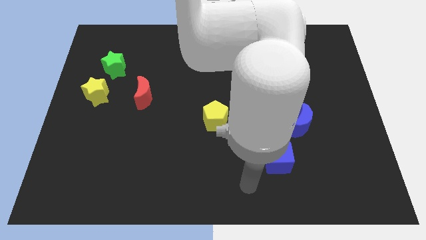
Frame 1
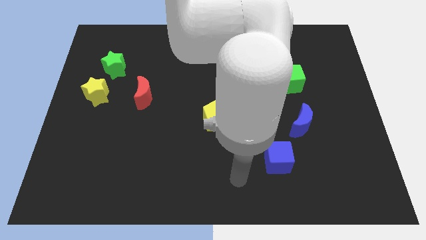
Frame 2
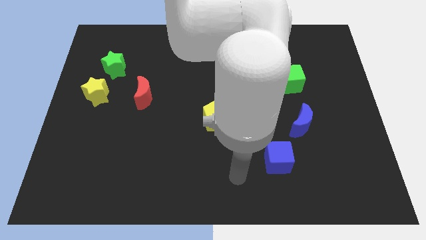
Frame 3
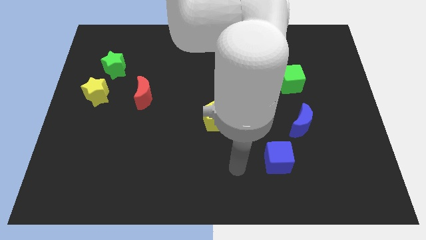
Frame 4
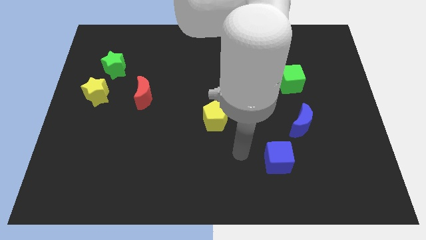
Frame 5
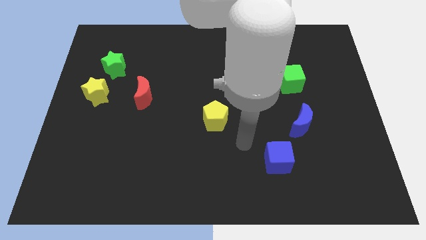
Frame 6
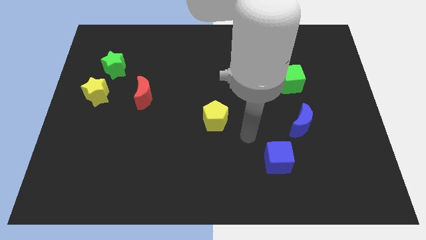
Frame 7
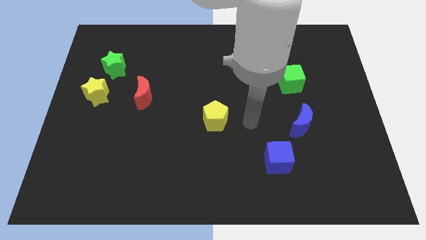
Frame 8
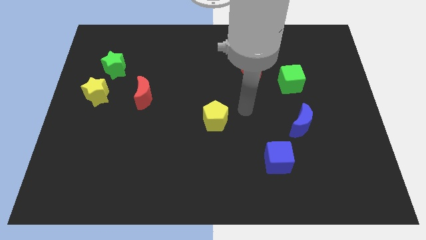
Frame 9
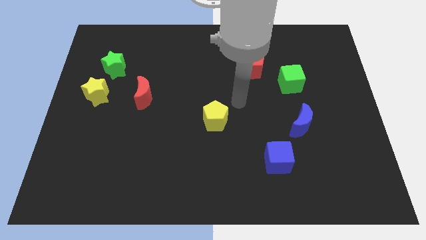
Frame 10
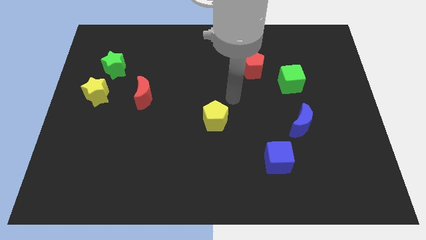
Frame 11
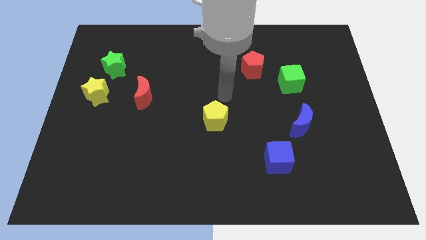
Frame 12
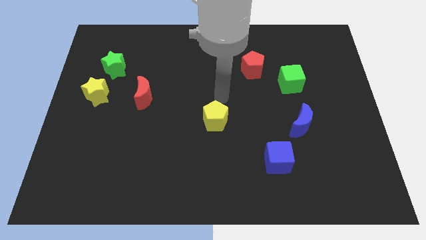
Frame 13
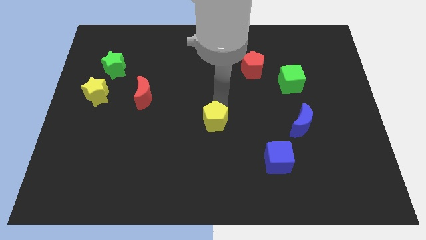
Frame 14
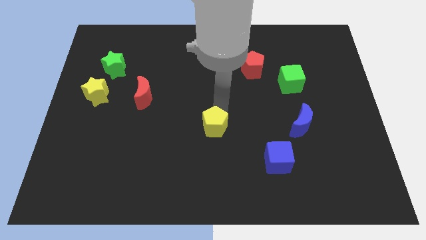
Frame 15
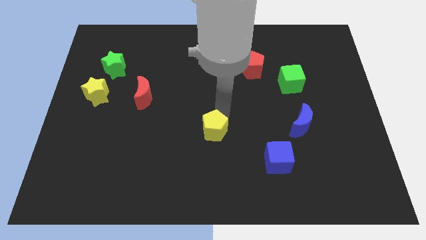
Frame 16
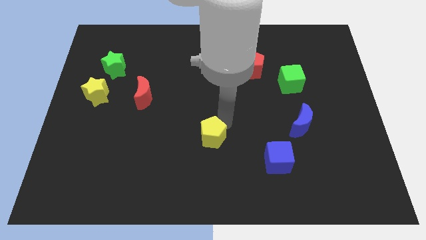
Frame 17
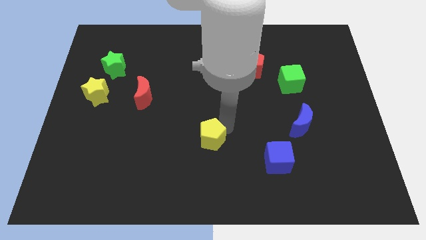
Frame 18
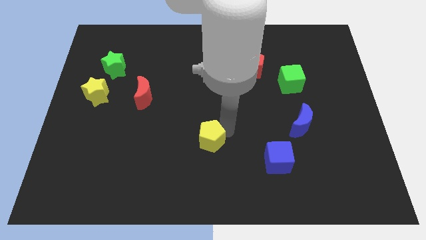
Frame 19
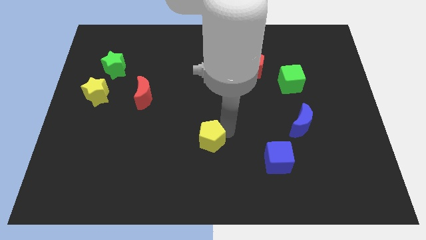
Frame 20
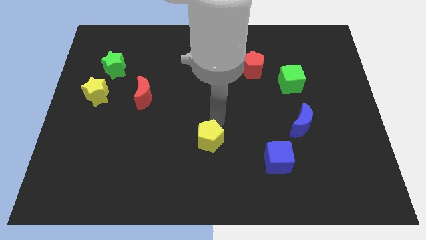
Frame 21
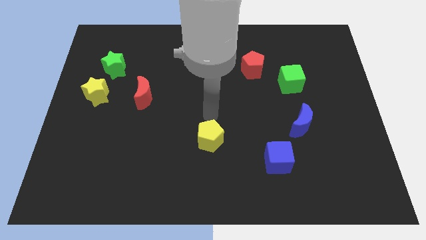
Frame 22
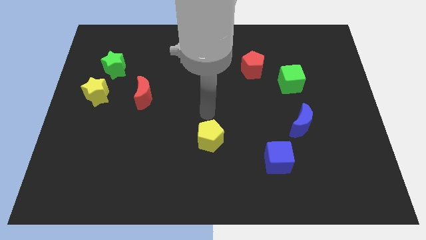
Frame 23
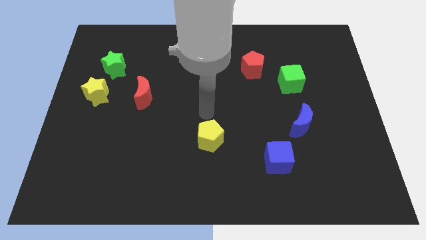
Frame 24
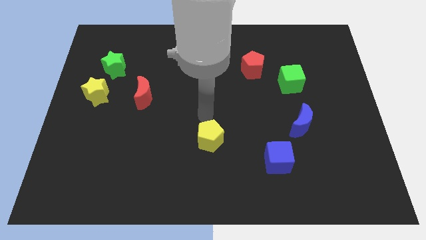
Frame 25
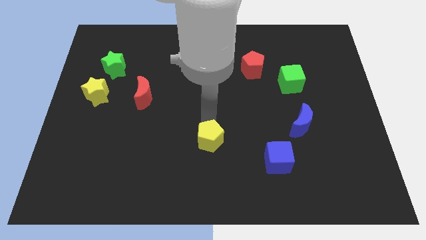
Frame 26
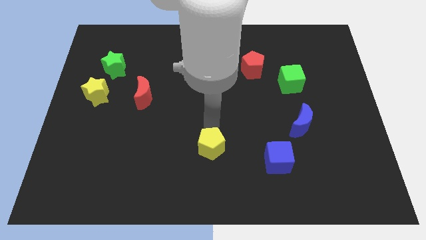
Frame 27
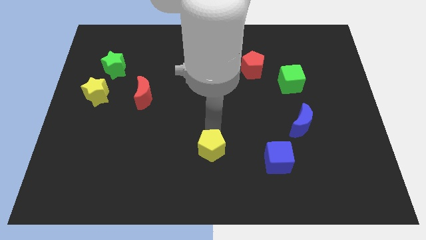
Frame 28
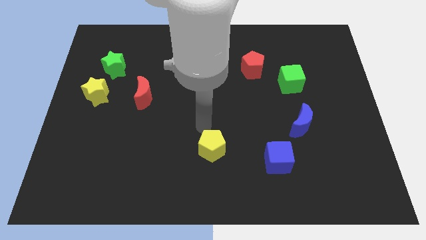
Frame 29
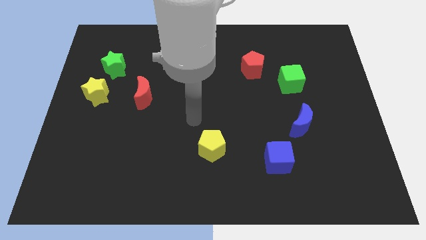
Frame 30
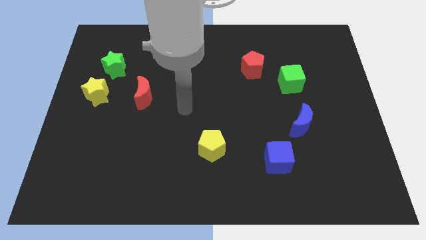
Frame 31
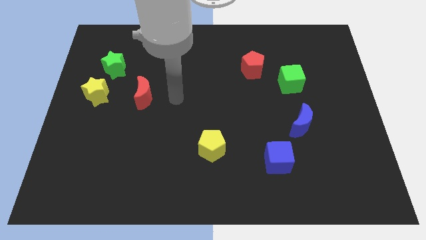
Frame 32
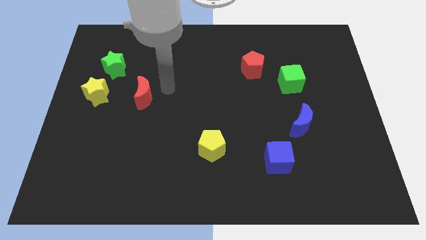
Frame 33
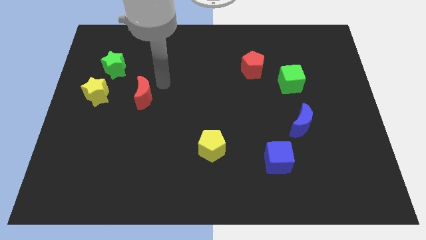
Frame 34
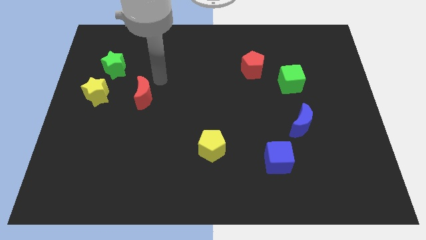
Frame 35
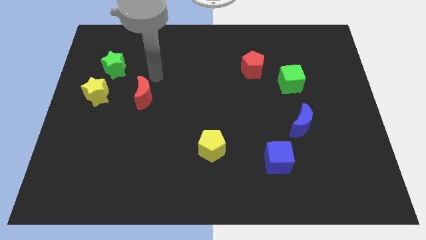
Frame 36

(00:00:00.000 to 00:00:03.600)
move the yellow pentagon towards the left of the blue cube

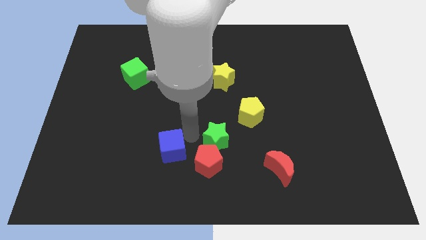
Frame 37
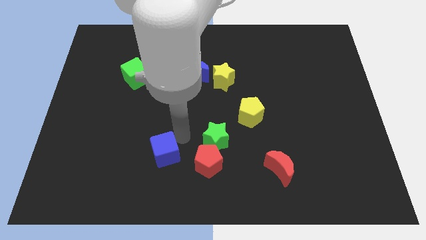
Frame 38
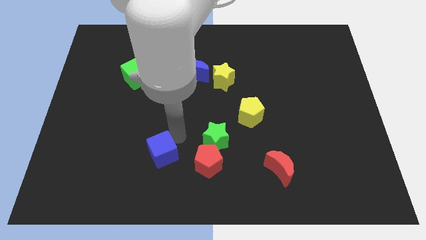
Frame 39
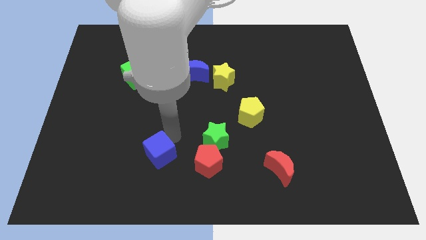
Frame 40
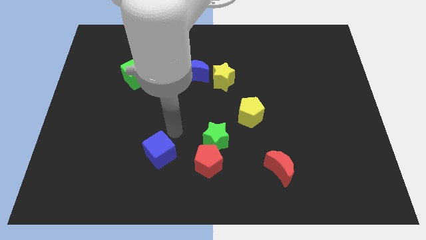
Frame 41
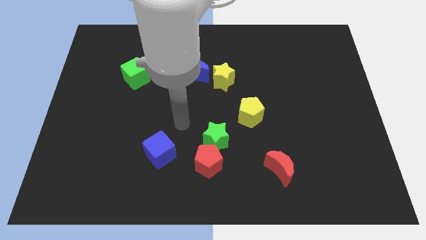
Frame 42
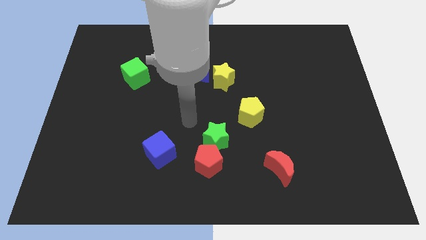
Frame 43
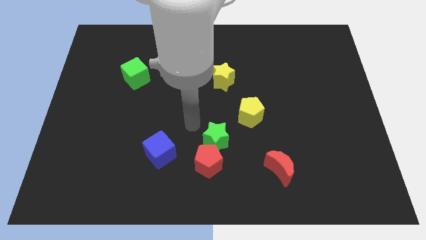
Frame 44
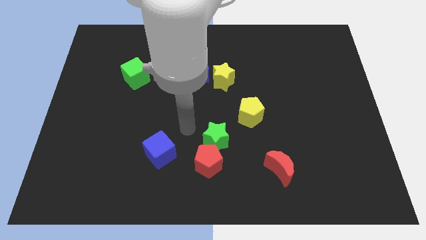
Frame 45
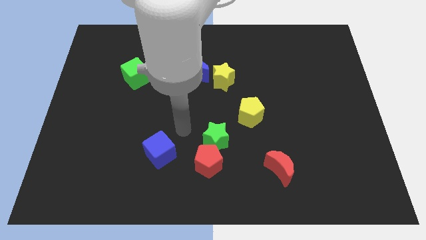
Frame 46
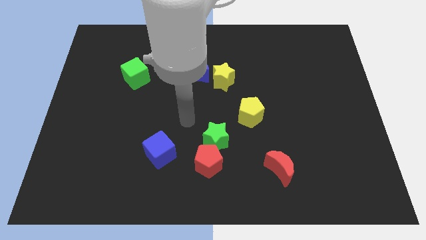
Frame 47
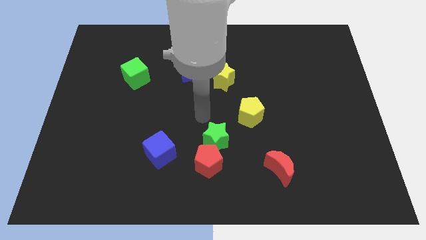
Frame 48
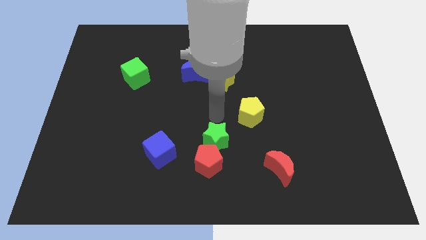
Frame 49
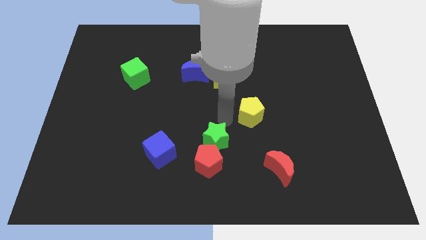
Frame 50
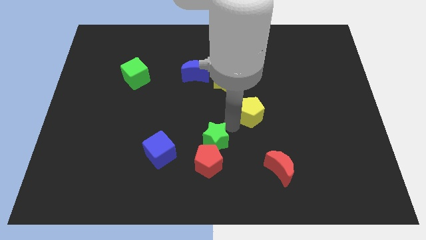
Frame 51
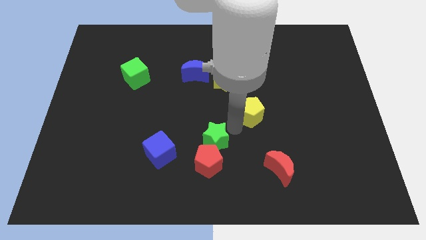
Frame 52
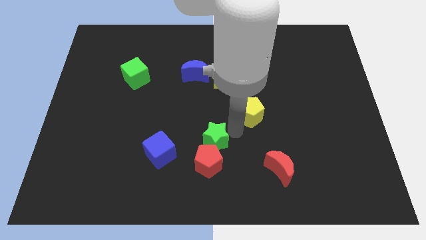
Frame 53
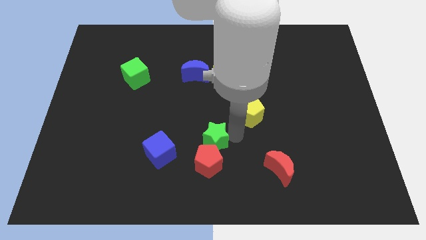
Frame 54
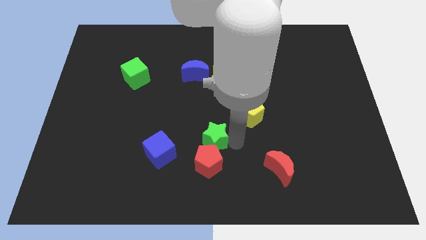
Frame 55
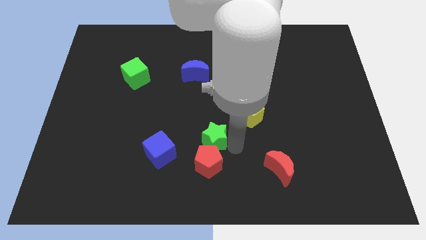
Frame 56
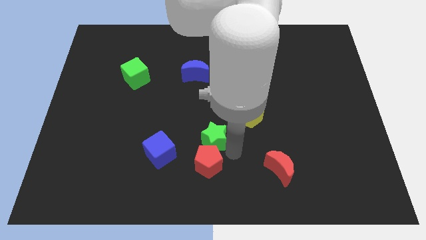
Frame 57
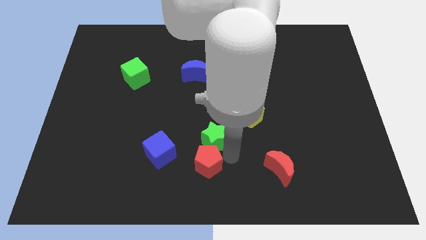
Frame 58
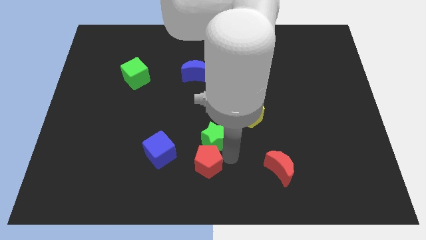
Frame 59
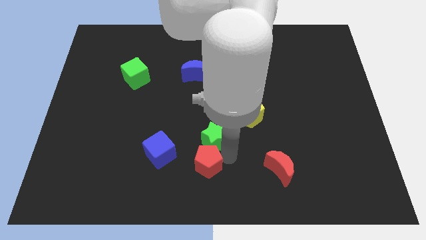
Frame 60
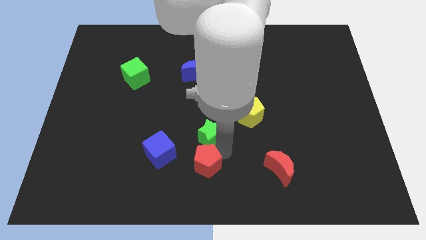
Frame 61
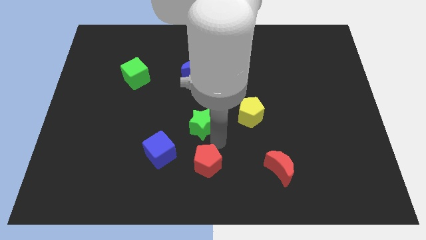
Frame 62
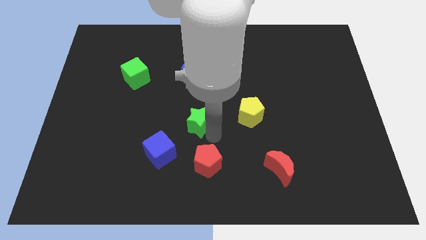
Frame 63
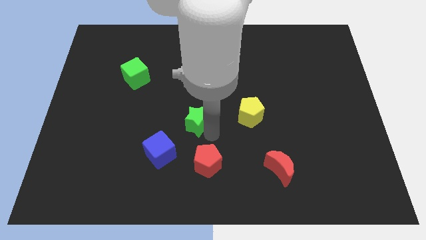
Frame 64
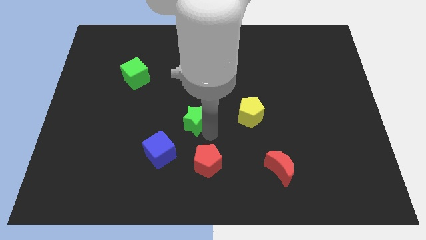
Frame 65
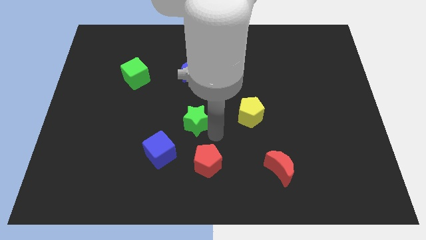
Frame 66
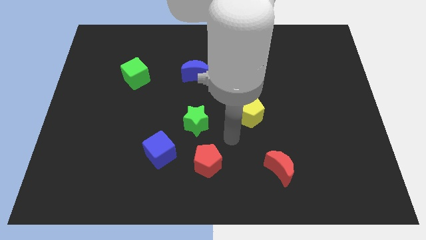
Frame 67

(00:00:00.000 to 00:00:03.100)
make a triangle out of green star red pentagon and the blue cube

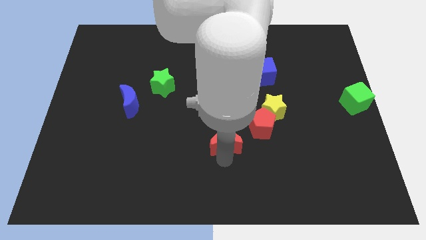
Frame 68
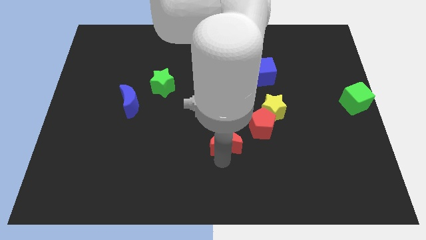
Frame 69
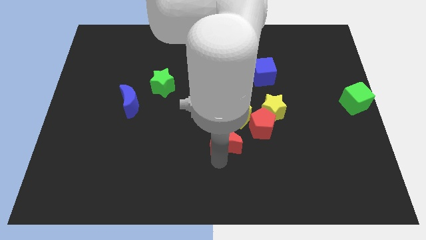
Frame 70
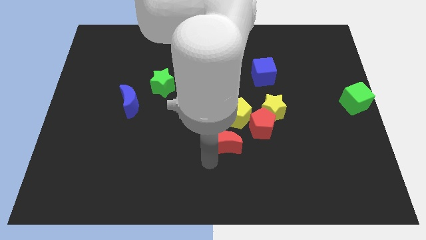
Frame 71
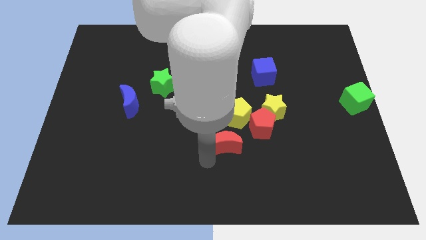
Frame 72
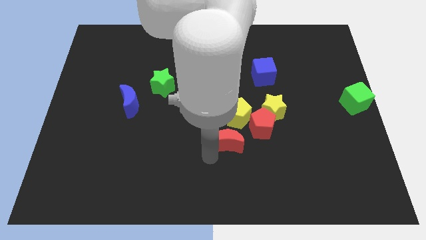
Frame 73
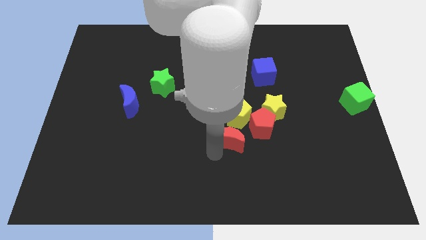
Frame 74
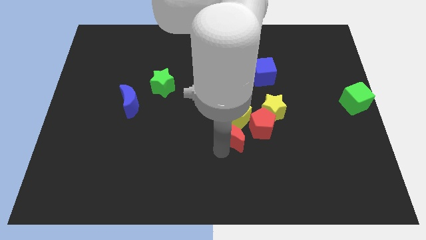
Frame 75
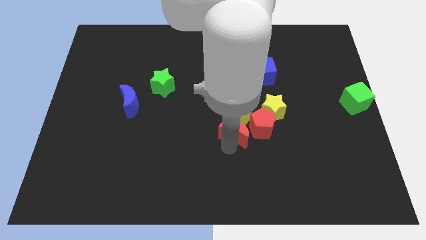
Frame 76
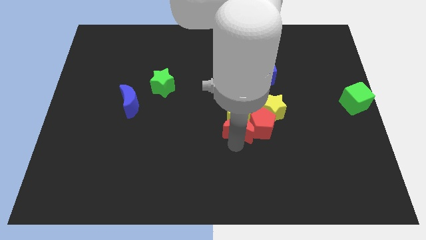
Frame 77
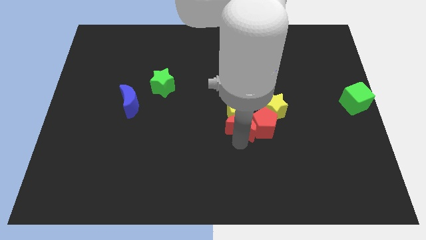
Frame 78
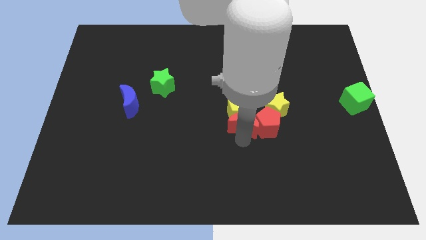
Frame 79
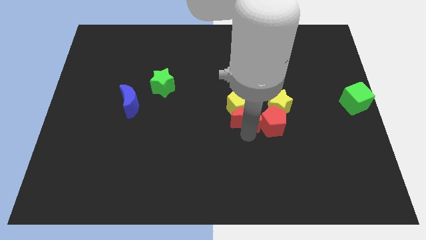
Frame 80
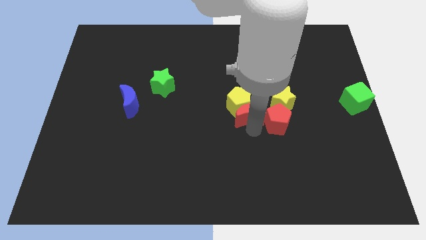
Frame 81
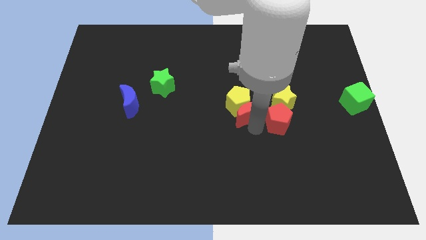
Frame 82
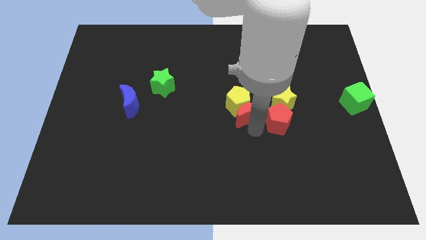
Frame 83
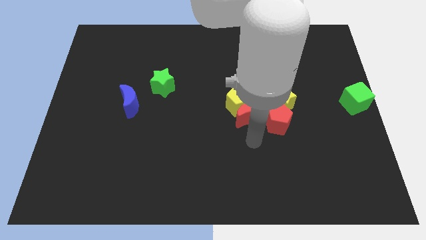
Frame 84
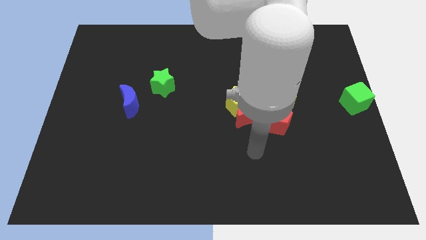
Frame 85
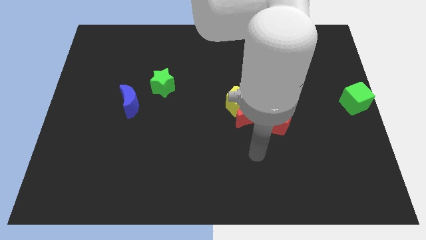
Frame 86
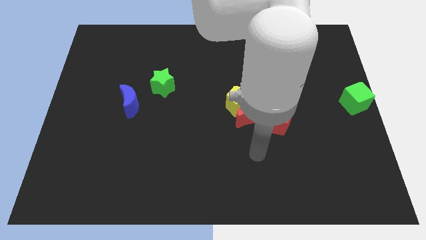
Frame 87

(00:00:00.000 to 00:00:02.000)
push the red moon into the yellow pentagon

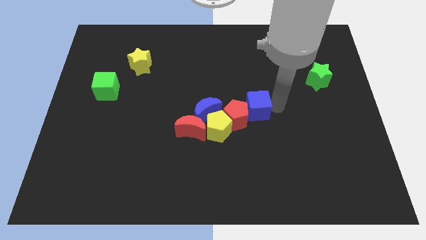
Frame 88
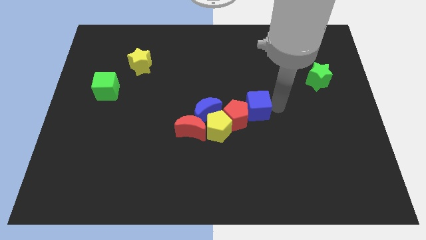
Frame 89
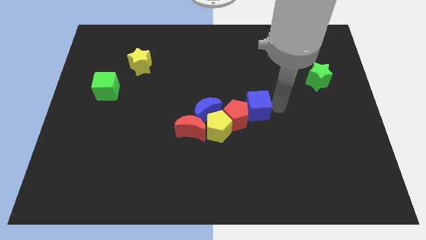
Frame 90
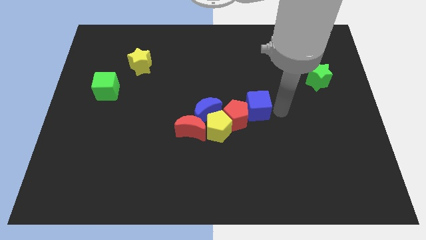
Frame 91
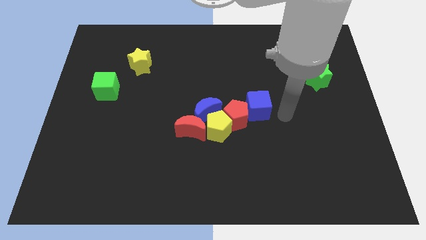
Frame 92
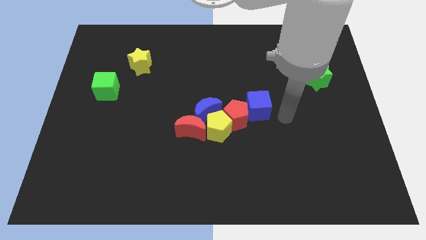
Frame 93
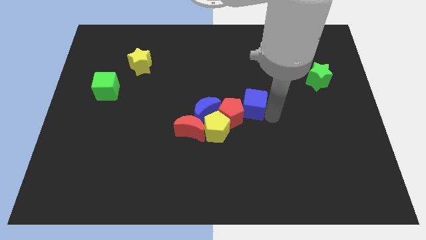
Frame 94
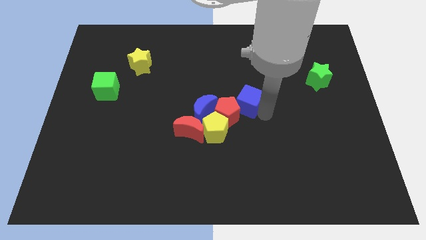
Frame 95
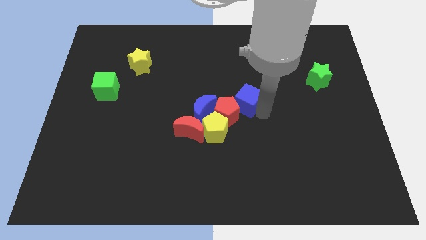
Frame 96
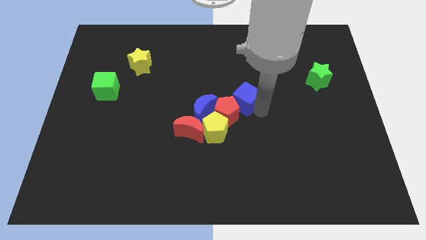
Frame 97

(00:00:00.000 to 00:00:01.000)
push the blue cube into the red pentagon
